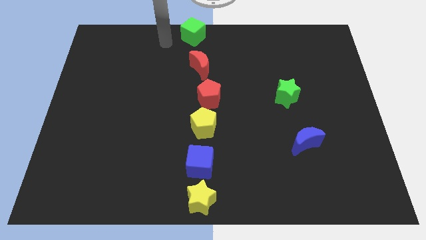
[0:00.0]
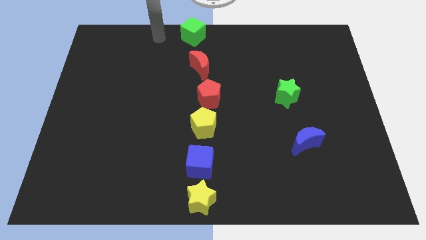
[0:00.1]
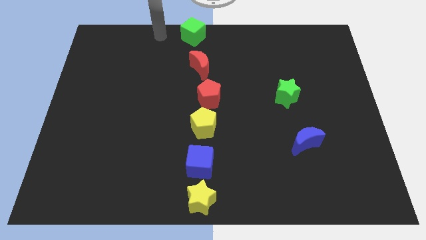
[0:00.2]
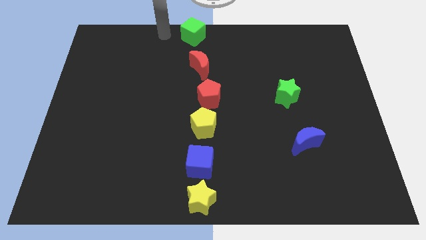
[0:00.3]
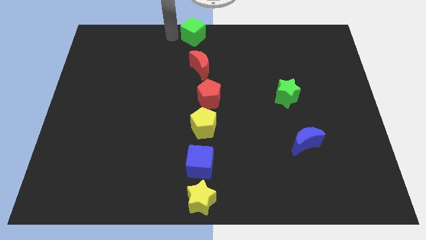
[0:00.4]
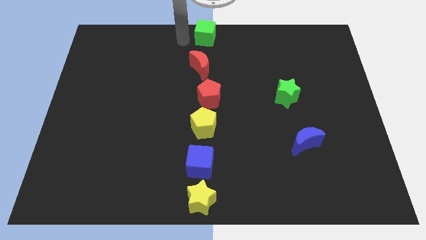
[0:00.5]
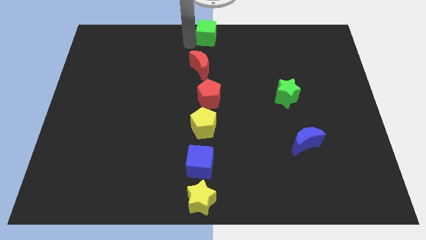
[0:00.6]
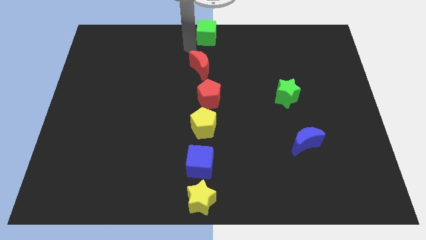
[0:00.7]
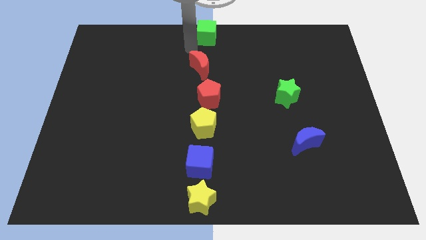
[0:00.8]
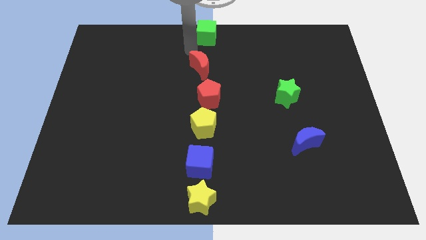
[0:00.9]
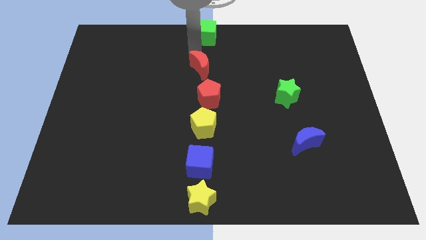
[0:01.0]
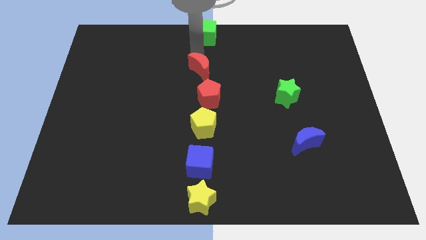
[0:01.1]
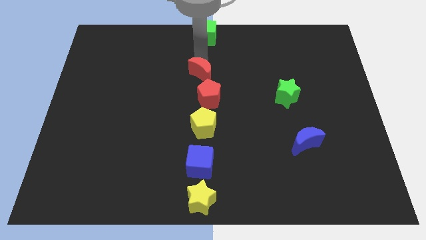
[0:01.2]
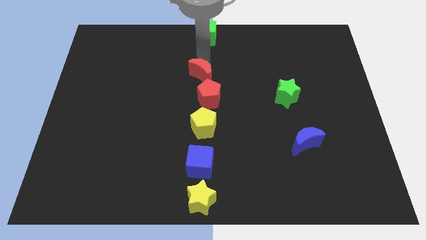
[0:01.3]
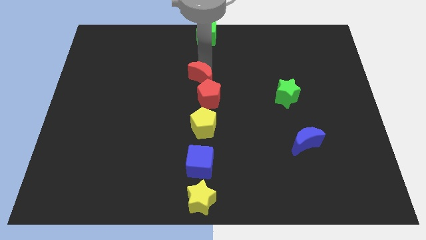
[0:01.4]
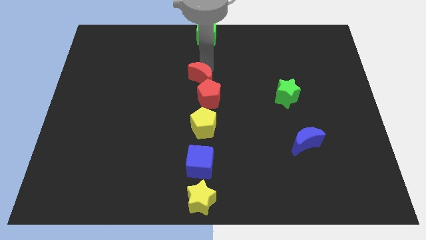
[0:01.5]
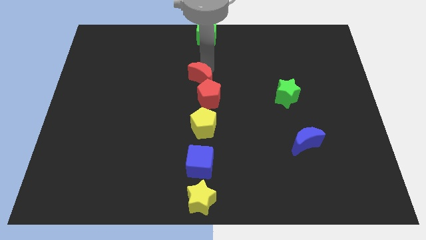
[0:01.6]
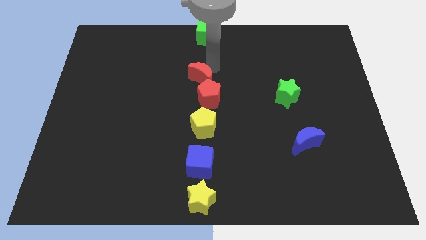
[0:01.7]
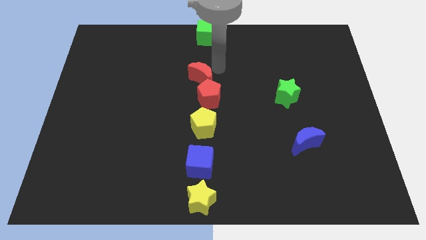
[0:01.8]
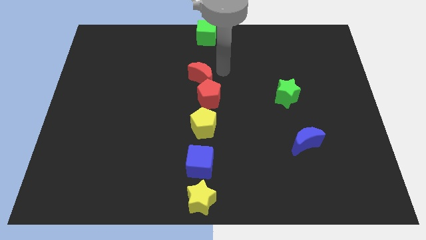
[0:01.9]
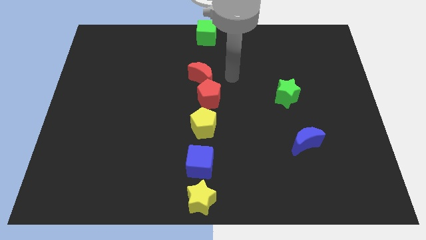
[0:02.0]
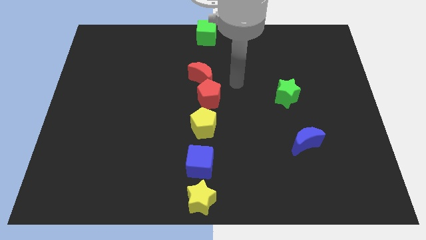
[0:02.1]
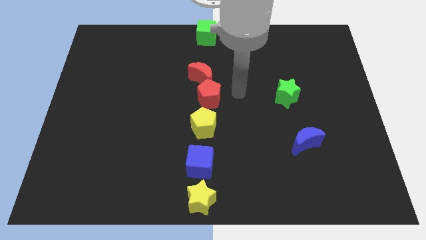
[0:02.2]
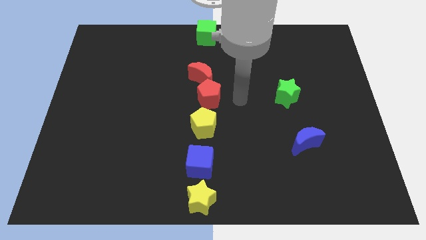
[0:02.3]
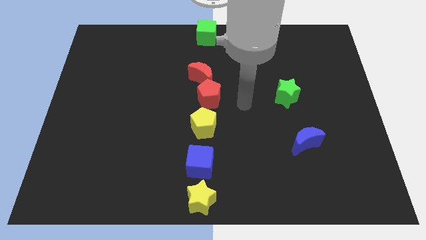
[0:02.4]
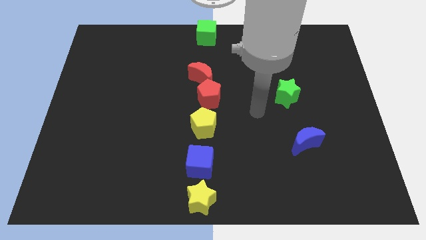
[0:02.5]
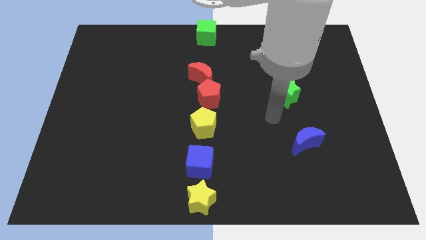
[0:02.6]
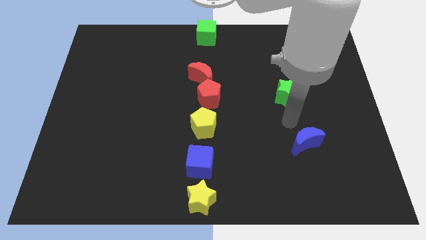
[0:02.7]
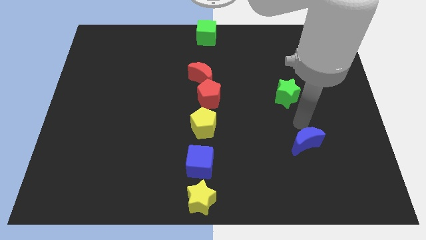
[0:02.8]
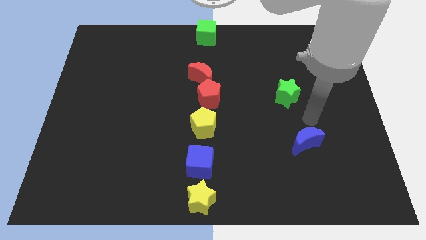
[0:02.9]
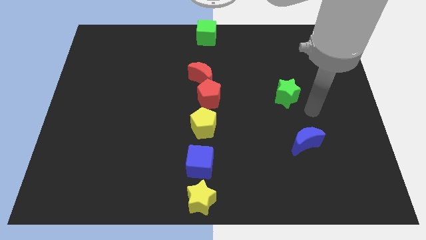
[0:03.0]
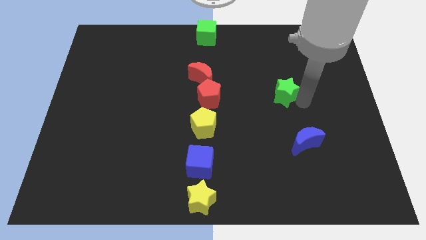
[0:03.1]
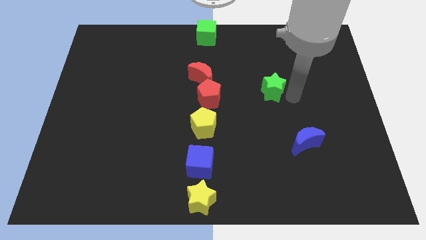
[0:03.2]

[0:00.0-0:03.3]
separate green cube and the red moon

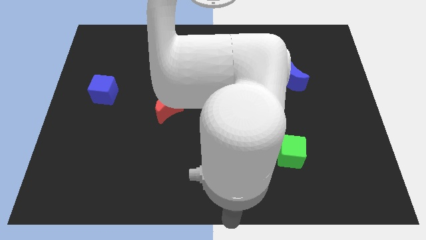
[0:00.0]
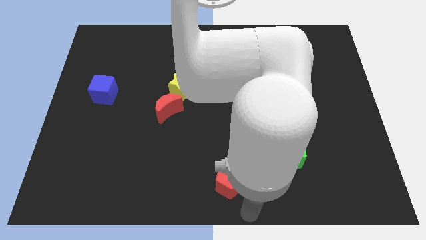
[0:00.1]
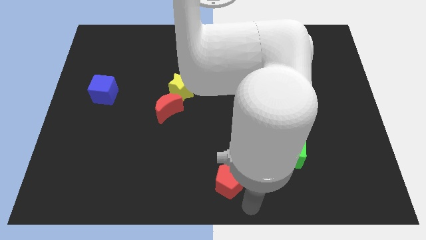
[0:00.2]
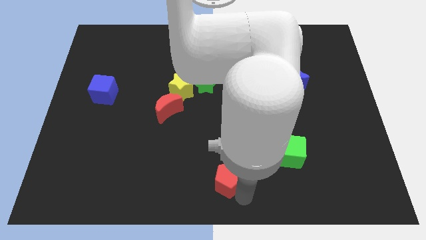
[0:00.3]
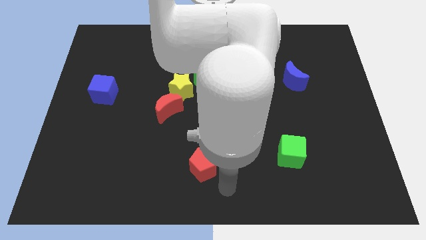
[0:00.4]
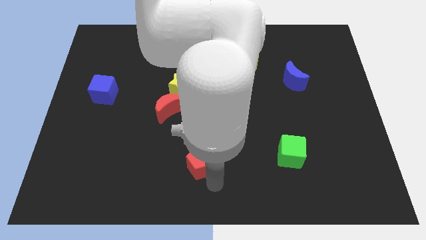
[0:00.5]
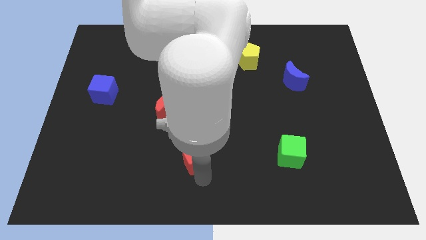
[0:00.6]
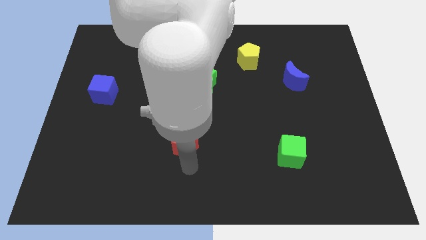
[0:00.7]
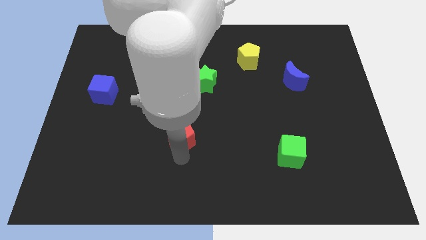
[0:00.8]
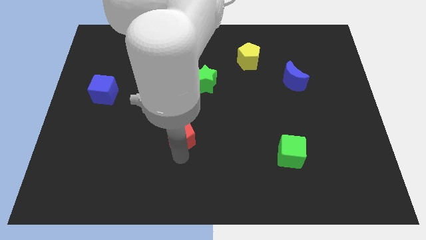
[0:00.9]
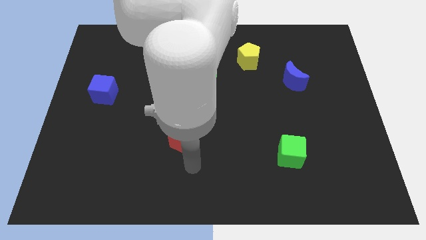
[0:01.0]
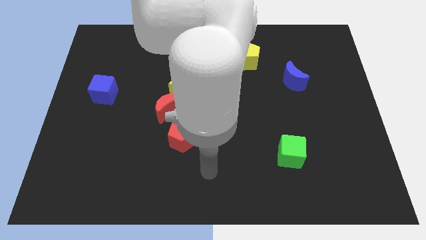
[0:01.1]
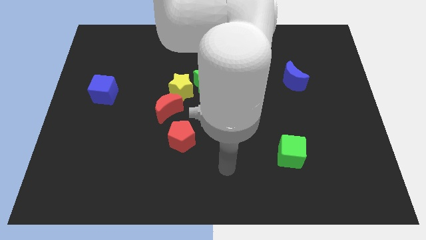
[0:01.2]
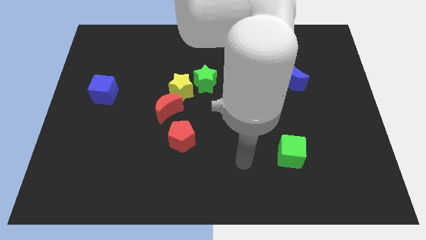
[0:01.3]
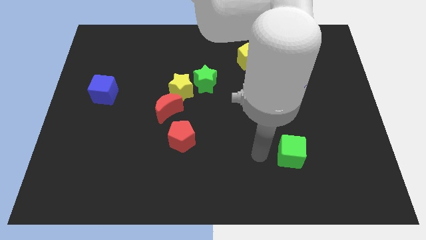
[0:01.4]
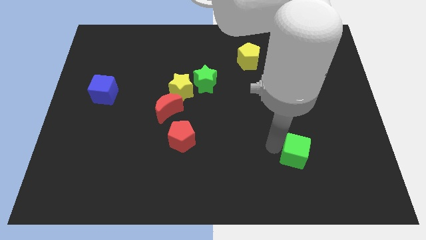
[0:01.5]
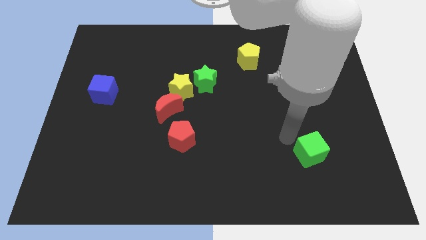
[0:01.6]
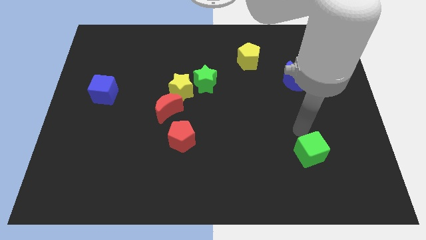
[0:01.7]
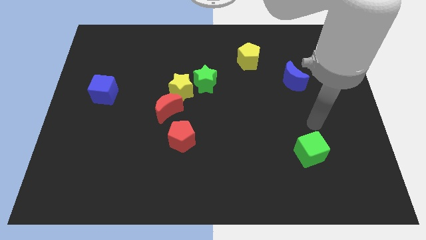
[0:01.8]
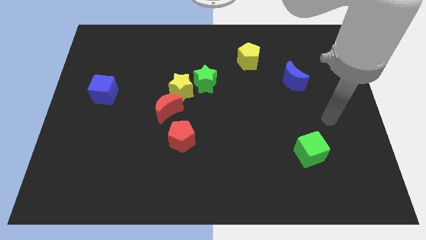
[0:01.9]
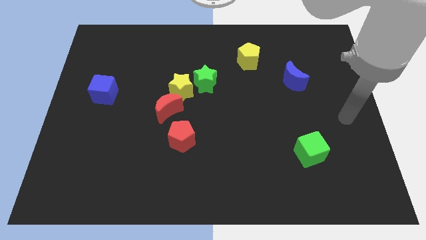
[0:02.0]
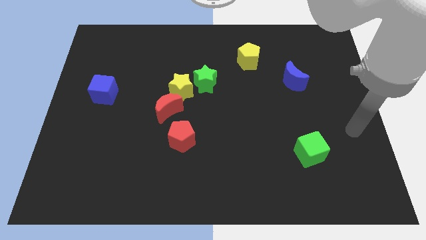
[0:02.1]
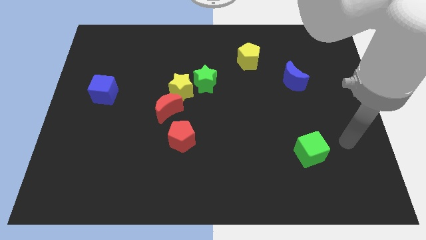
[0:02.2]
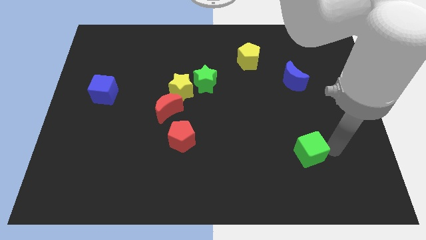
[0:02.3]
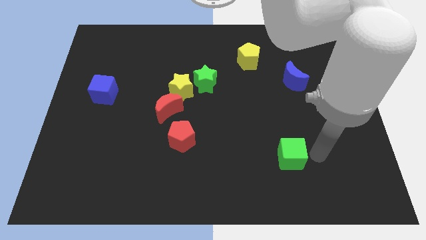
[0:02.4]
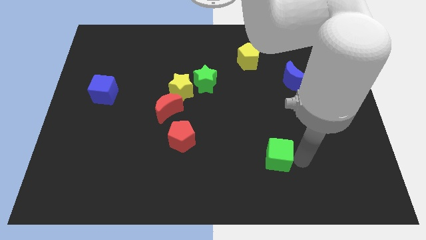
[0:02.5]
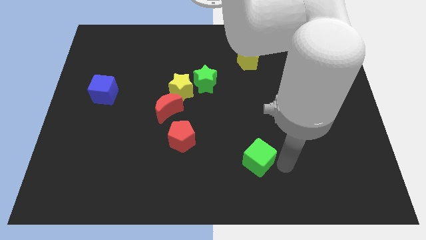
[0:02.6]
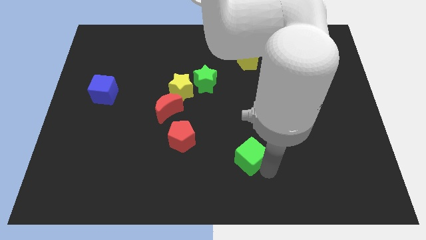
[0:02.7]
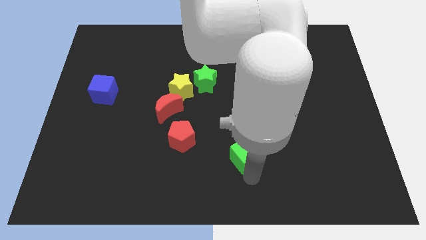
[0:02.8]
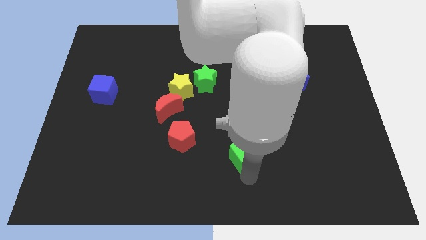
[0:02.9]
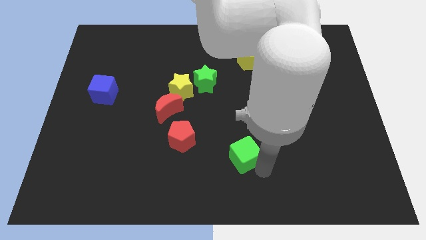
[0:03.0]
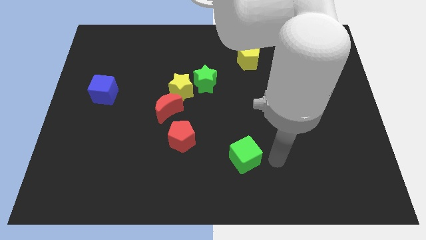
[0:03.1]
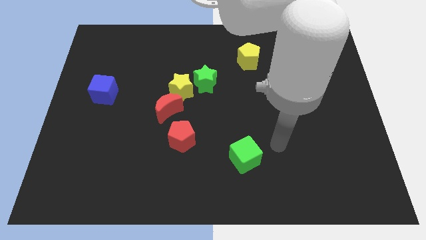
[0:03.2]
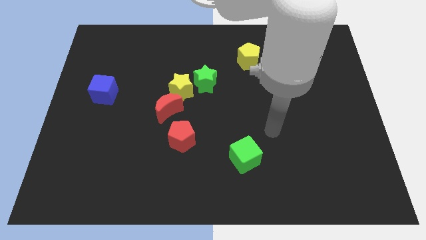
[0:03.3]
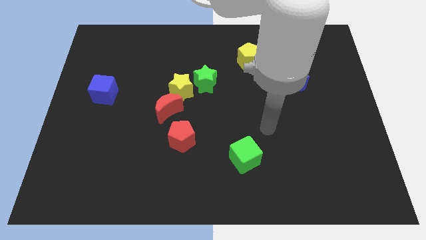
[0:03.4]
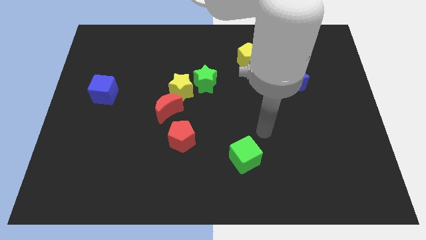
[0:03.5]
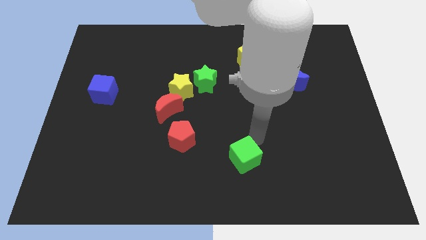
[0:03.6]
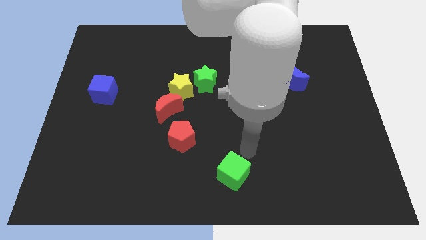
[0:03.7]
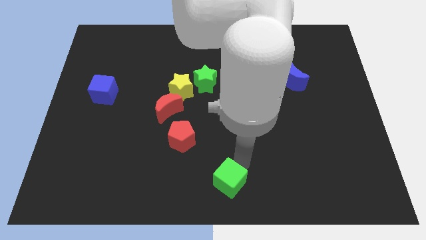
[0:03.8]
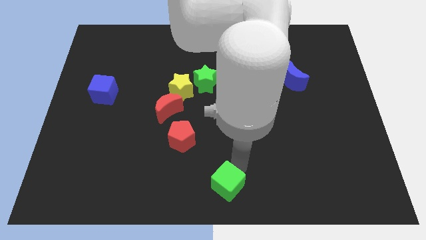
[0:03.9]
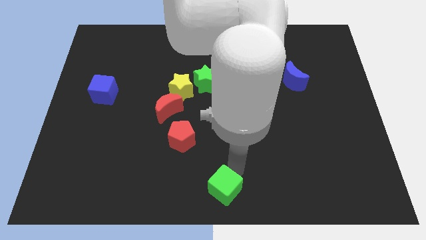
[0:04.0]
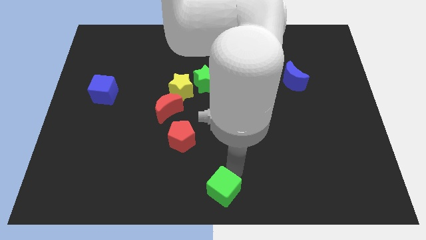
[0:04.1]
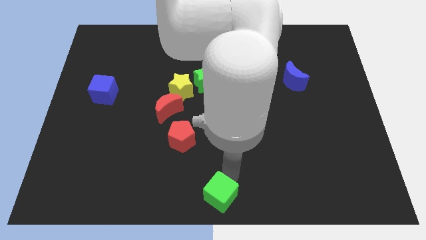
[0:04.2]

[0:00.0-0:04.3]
place the red pentagon and green cube diagonal to each other

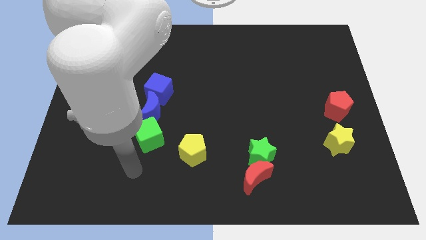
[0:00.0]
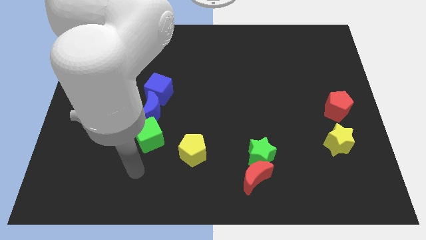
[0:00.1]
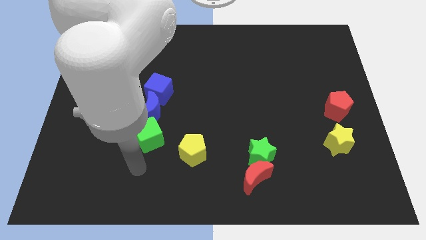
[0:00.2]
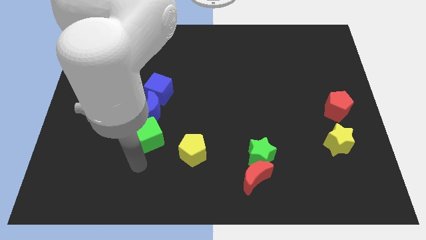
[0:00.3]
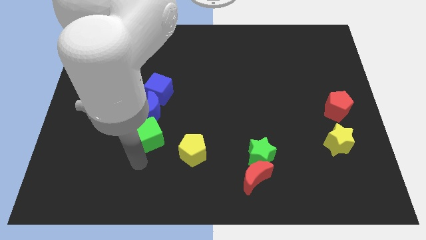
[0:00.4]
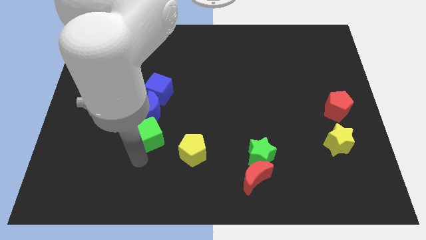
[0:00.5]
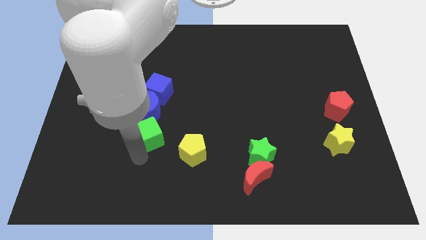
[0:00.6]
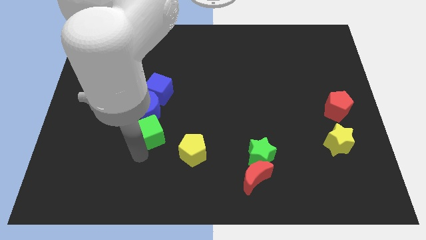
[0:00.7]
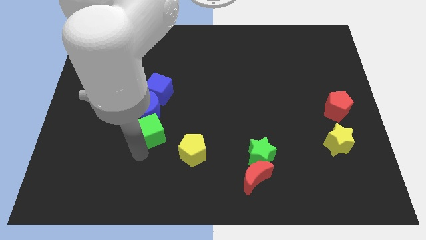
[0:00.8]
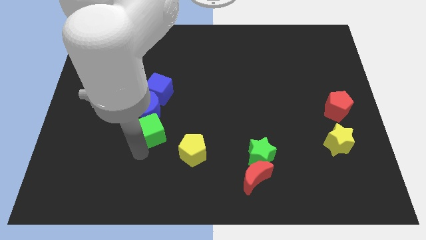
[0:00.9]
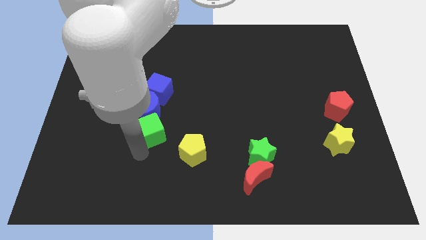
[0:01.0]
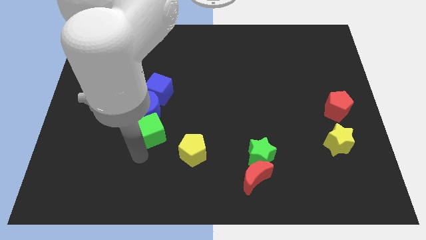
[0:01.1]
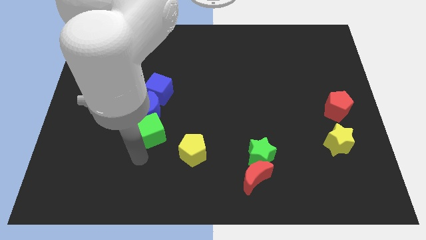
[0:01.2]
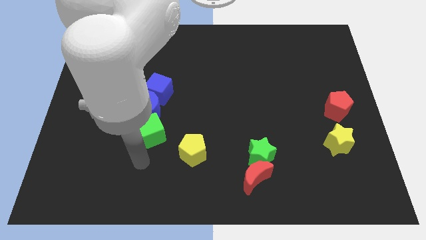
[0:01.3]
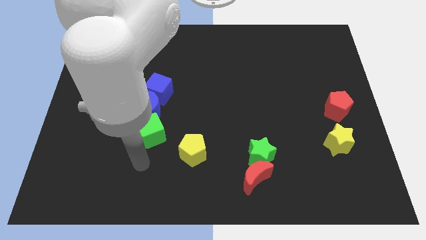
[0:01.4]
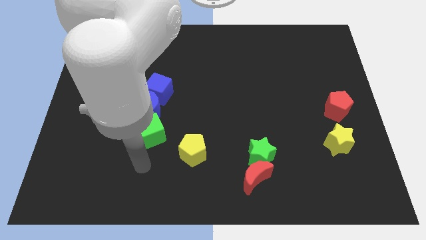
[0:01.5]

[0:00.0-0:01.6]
push the green cube towards the blue moon
